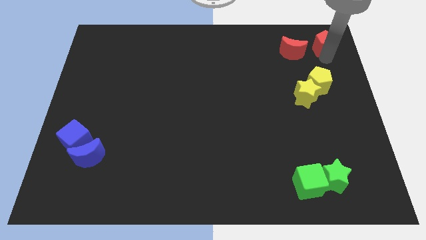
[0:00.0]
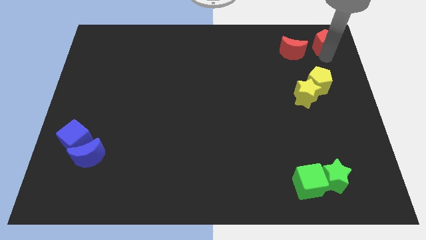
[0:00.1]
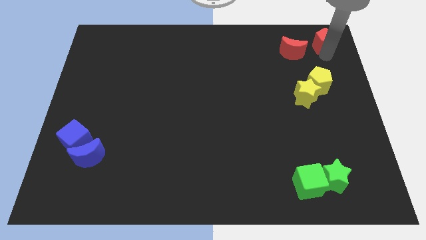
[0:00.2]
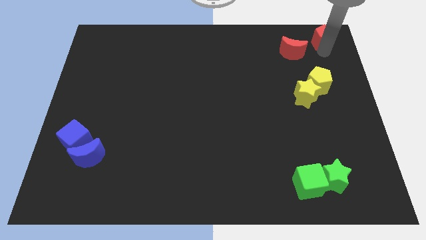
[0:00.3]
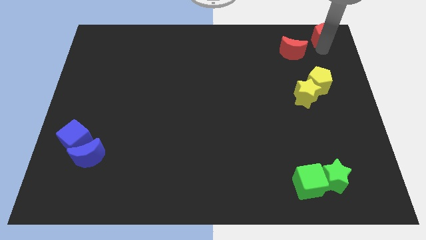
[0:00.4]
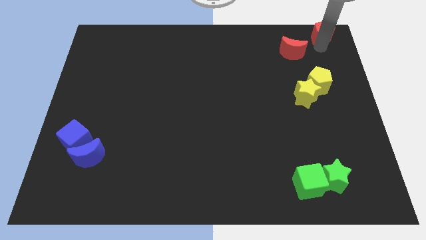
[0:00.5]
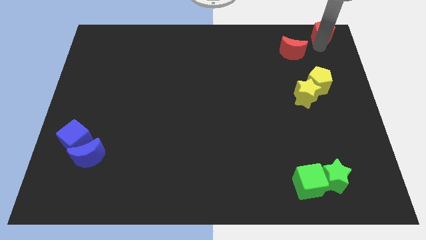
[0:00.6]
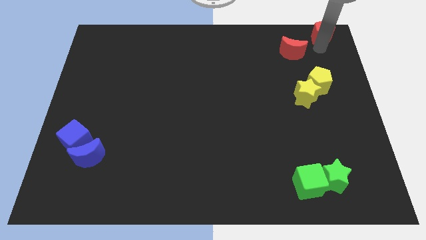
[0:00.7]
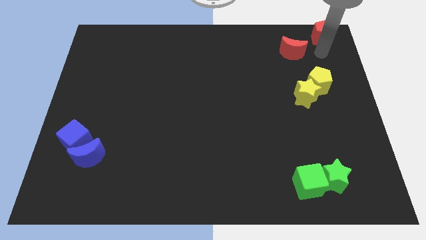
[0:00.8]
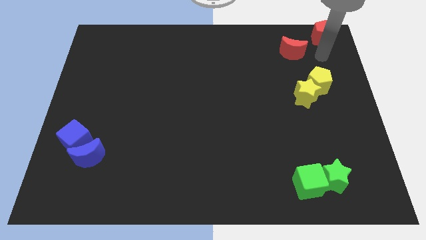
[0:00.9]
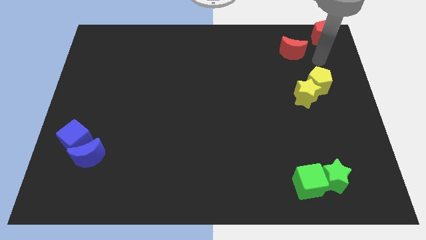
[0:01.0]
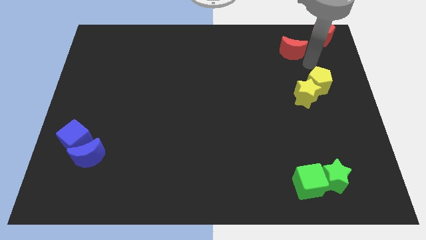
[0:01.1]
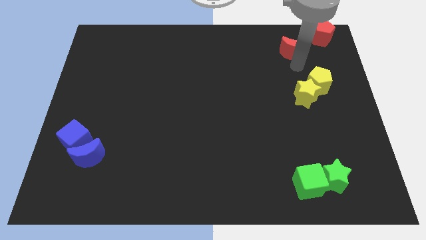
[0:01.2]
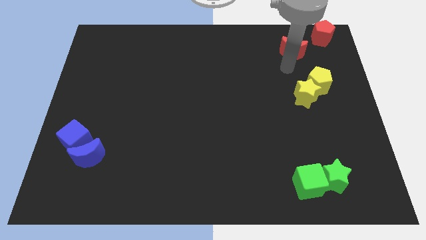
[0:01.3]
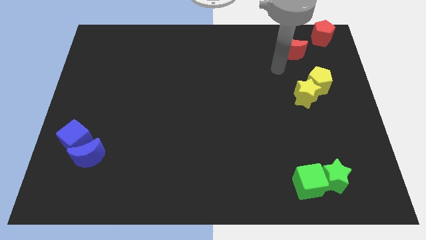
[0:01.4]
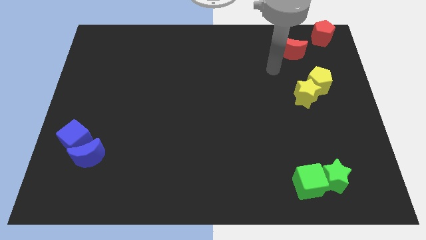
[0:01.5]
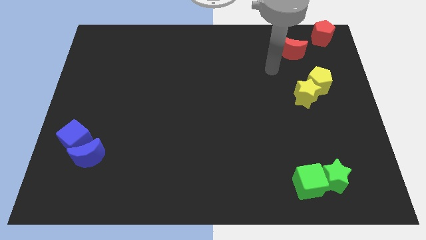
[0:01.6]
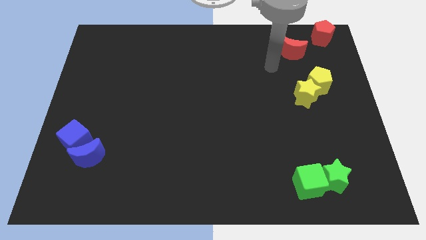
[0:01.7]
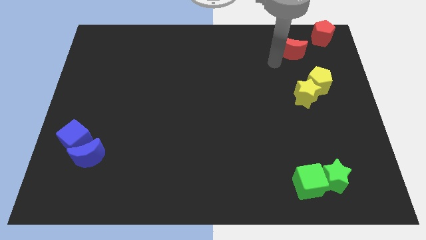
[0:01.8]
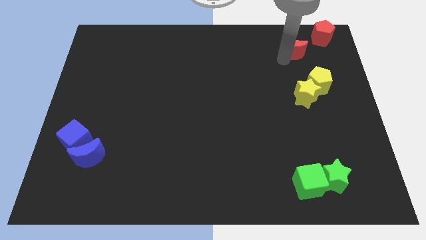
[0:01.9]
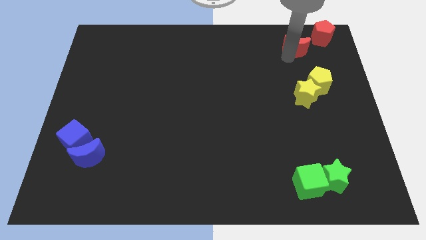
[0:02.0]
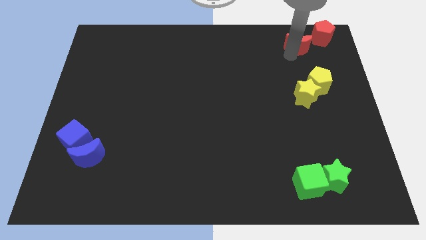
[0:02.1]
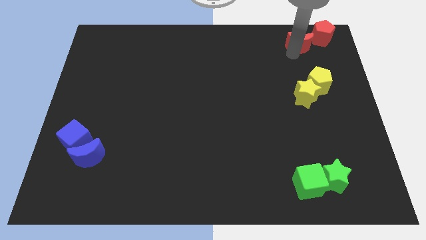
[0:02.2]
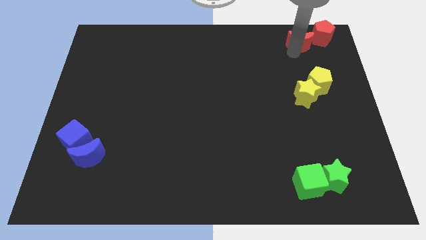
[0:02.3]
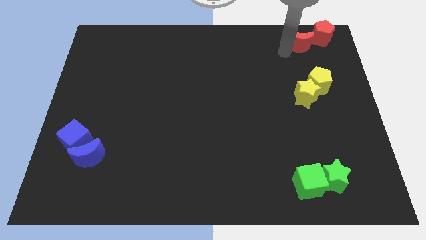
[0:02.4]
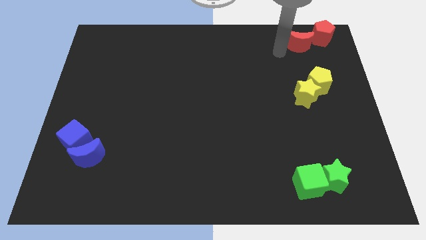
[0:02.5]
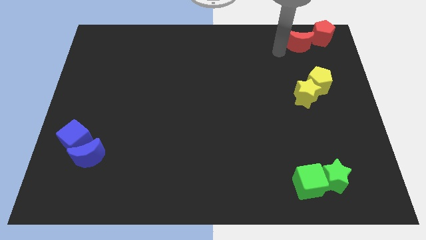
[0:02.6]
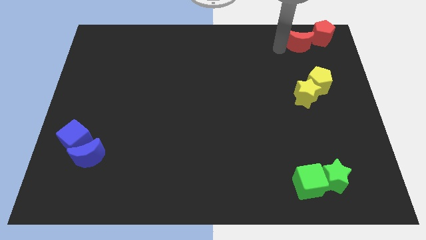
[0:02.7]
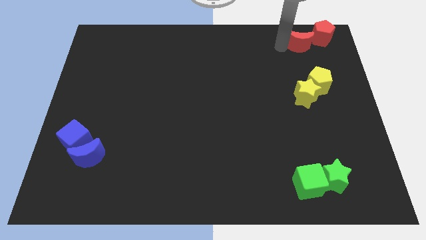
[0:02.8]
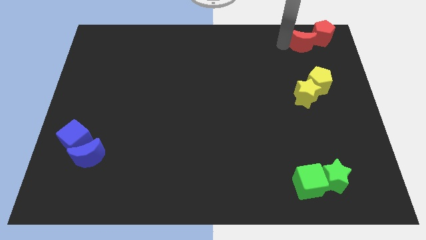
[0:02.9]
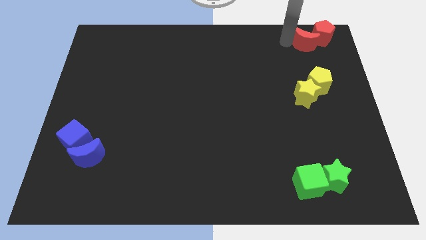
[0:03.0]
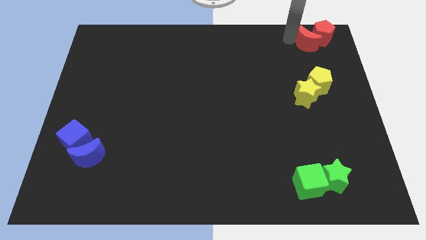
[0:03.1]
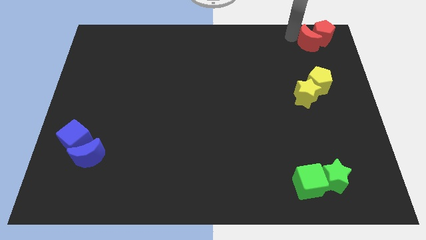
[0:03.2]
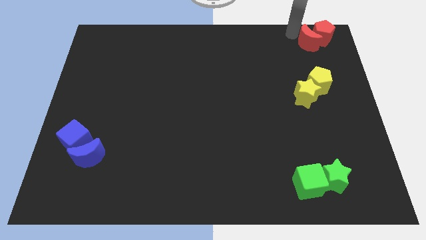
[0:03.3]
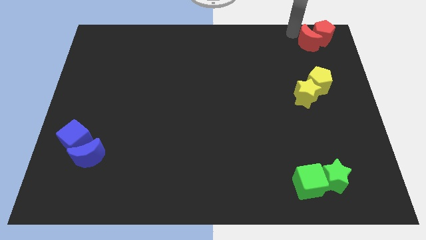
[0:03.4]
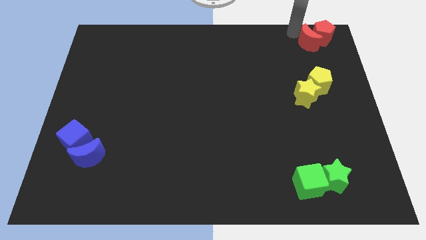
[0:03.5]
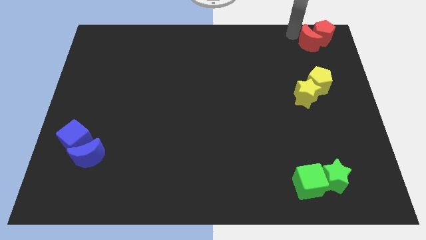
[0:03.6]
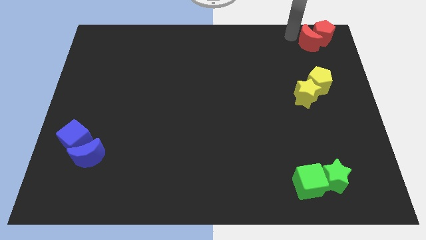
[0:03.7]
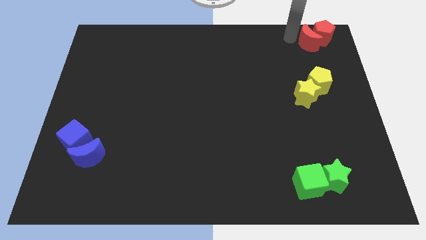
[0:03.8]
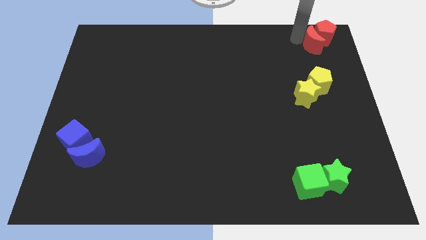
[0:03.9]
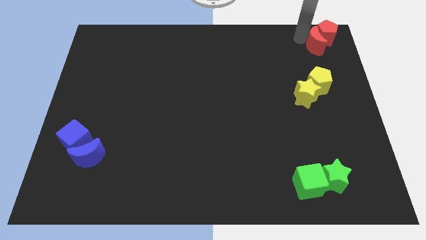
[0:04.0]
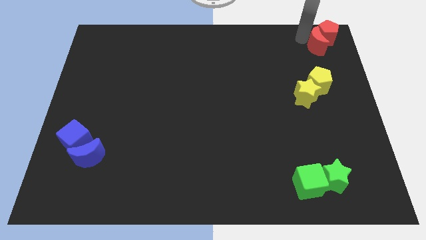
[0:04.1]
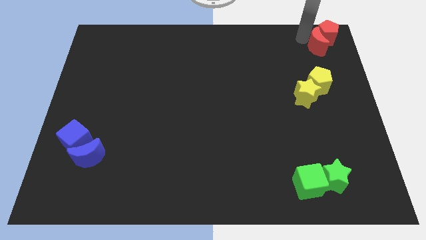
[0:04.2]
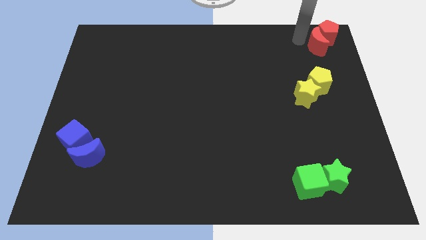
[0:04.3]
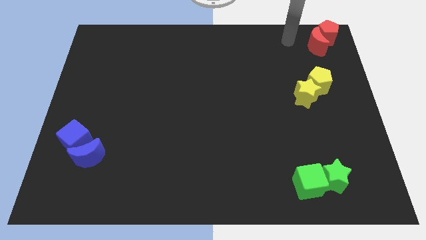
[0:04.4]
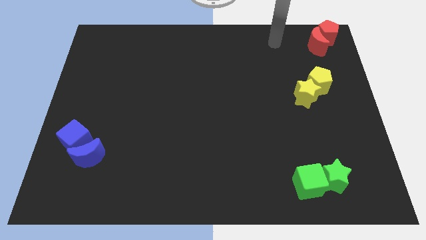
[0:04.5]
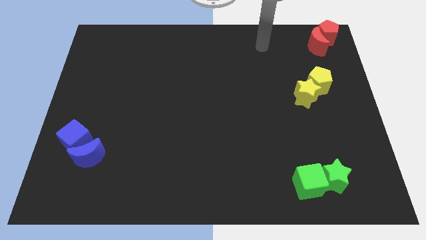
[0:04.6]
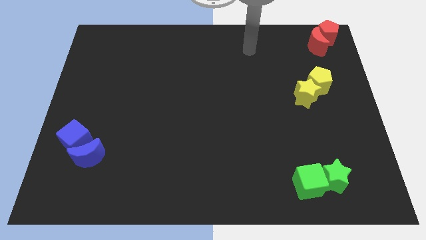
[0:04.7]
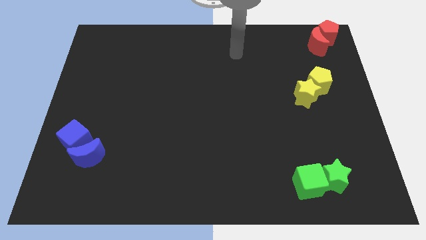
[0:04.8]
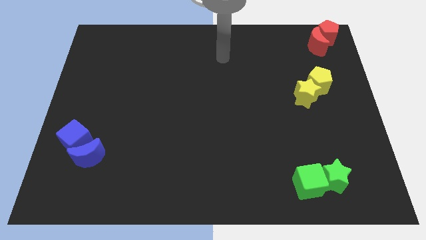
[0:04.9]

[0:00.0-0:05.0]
move the red pentagon and red moon to the top right side

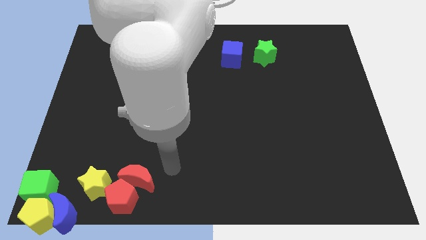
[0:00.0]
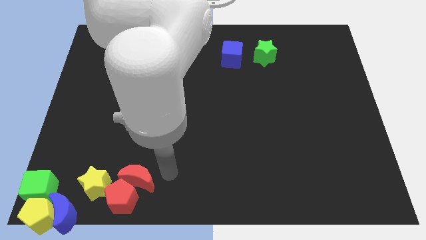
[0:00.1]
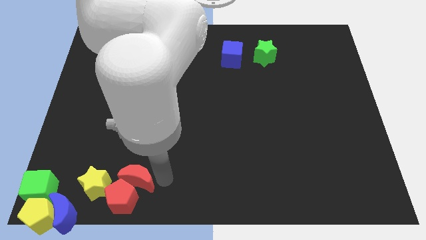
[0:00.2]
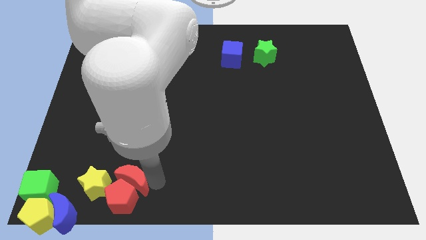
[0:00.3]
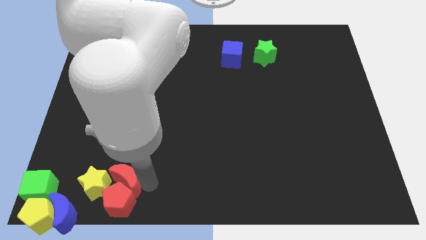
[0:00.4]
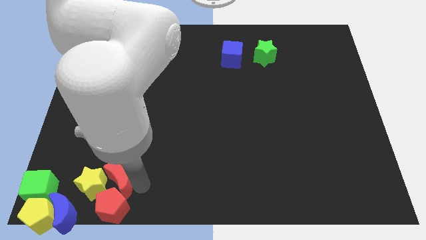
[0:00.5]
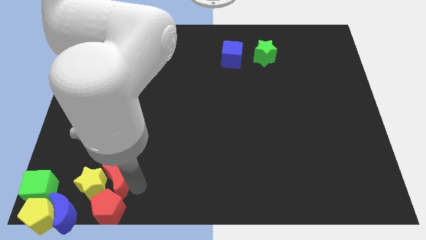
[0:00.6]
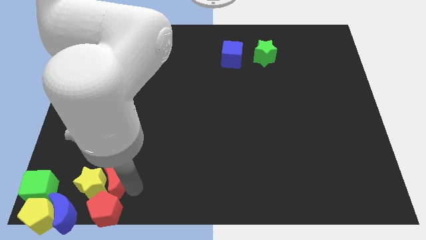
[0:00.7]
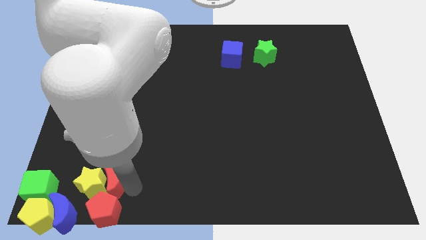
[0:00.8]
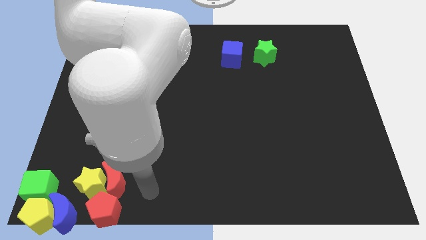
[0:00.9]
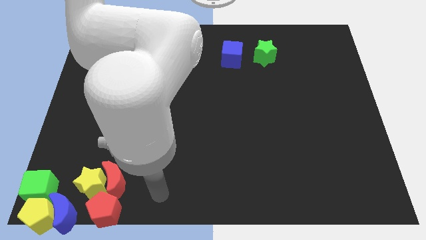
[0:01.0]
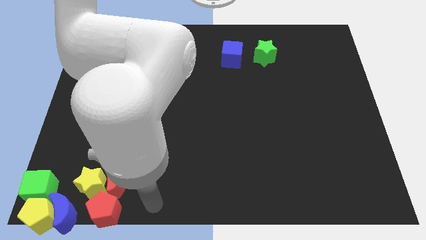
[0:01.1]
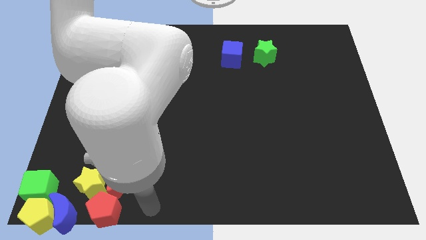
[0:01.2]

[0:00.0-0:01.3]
move the red crescent right to the yellow star

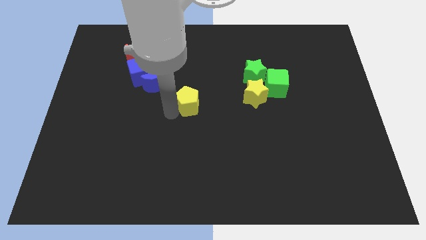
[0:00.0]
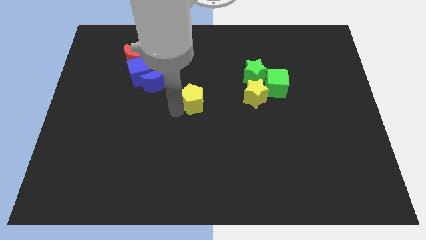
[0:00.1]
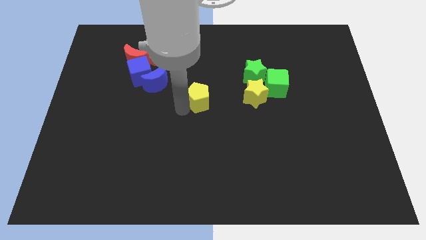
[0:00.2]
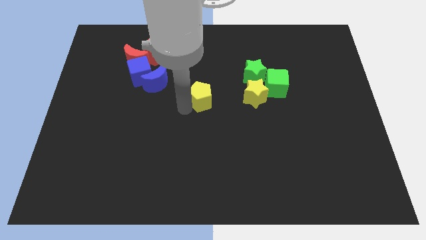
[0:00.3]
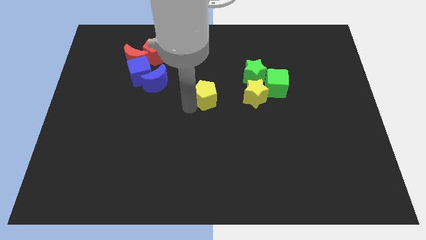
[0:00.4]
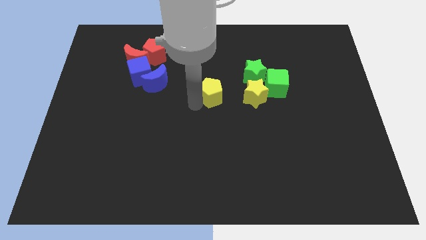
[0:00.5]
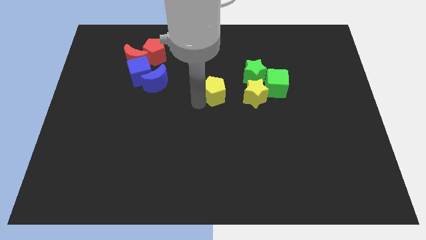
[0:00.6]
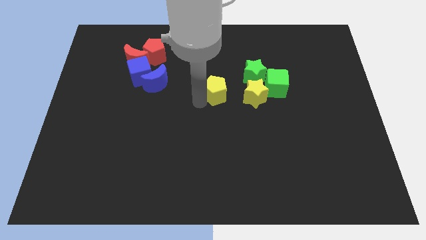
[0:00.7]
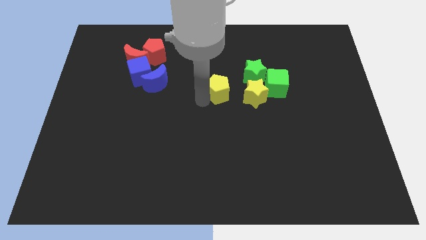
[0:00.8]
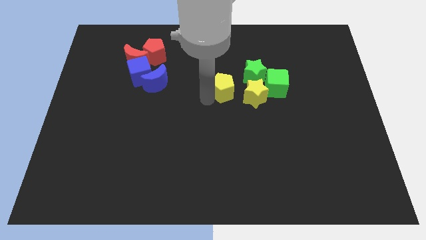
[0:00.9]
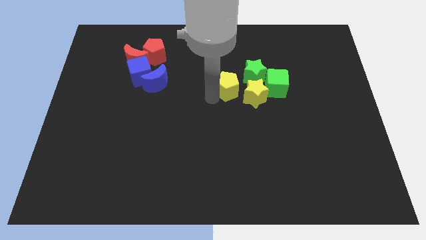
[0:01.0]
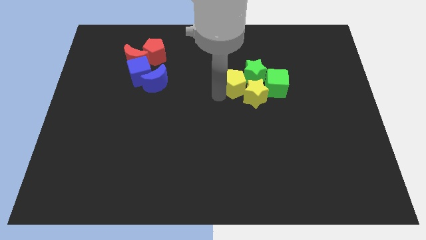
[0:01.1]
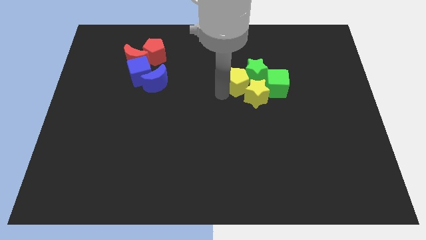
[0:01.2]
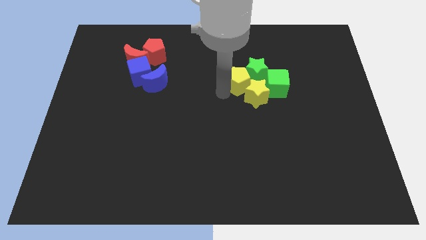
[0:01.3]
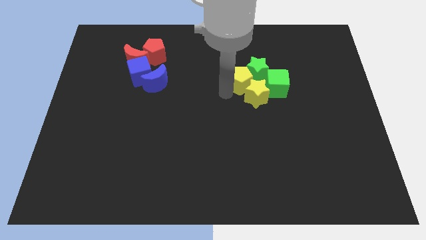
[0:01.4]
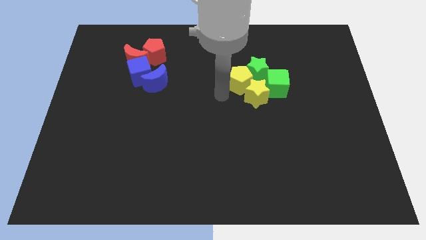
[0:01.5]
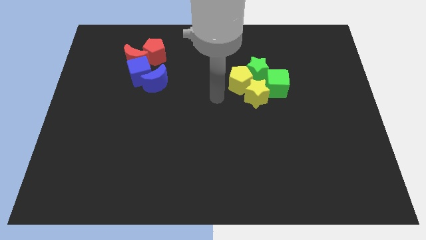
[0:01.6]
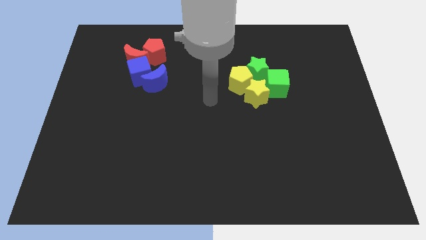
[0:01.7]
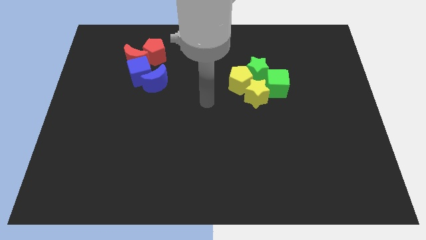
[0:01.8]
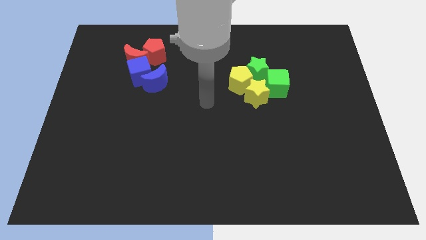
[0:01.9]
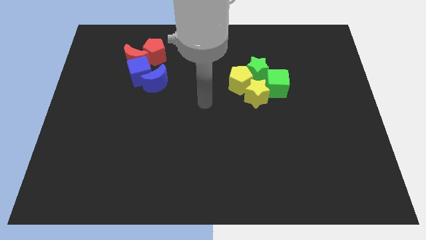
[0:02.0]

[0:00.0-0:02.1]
make a group of yellow and green blocks

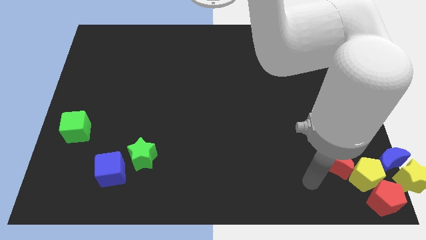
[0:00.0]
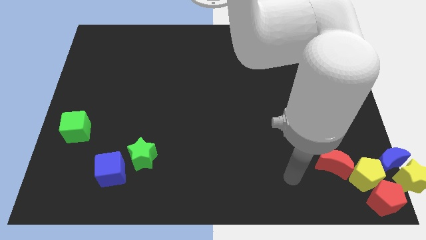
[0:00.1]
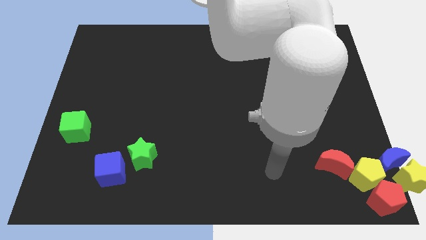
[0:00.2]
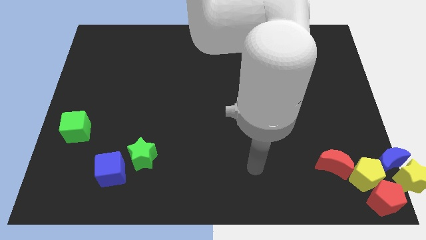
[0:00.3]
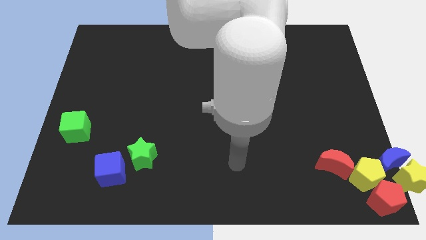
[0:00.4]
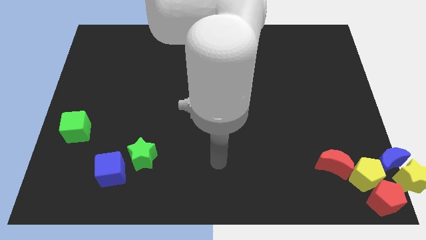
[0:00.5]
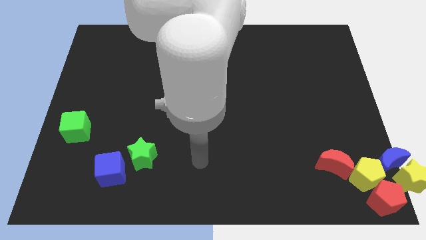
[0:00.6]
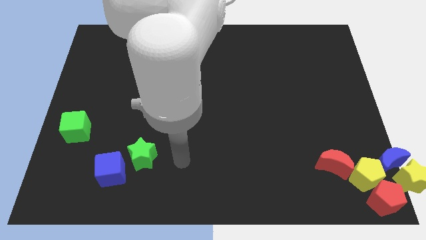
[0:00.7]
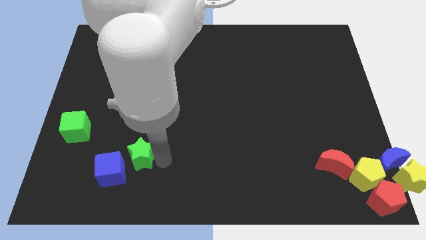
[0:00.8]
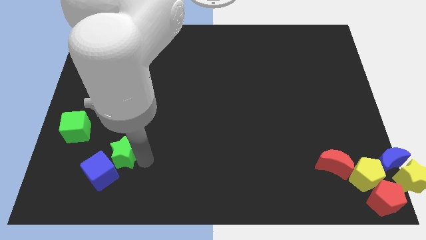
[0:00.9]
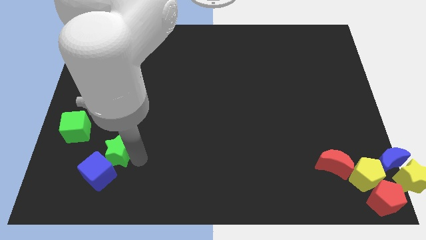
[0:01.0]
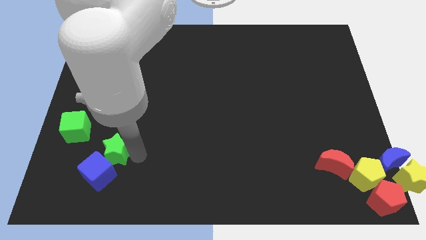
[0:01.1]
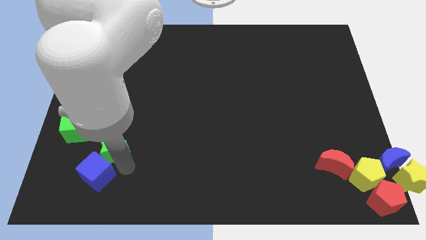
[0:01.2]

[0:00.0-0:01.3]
move the green star into the blue cube
